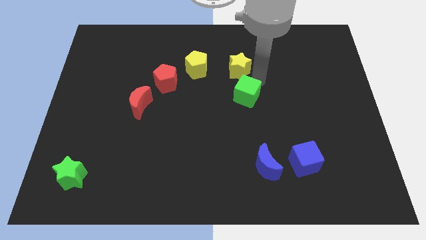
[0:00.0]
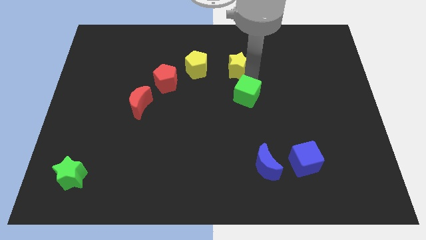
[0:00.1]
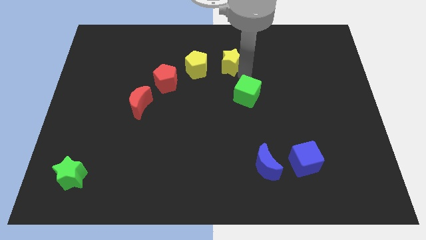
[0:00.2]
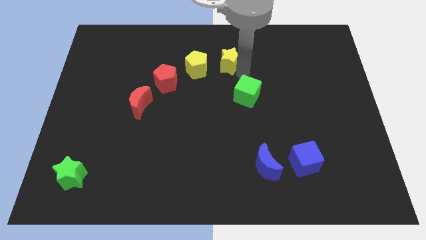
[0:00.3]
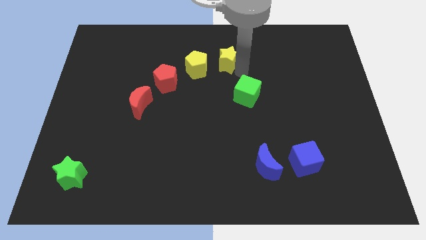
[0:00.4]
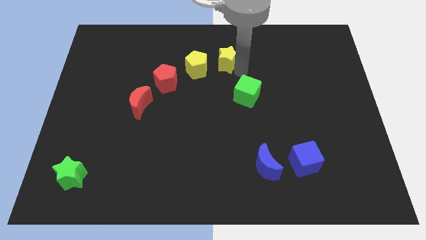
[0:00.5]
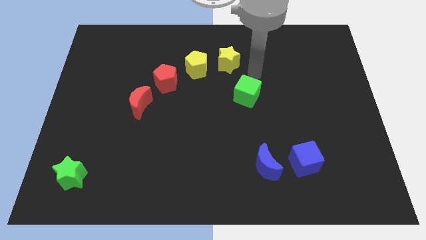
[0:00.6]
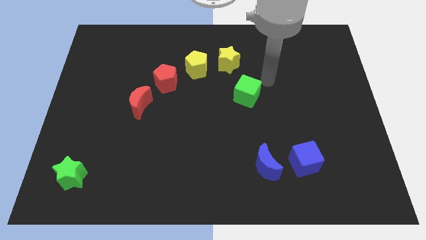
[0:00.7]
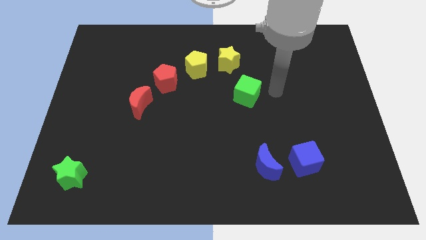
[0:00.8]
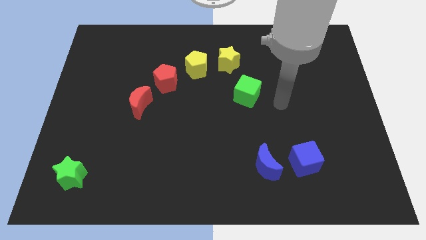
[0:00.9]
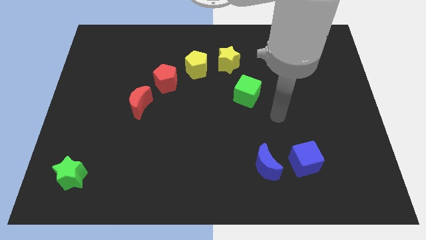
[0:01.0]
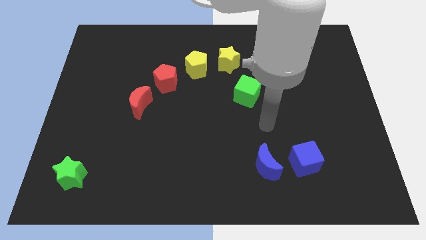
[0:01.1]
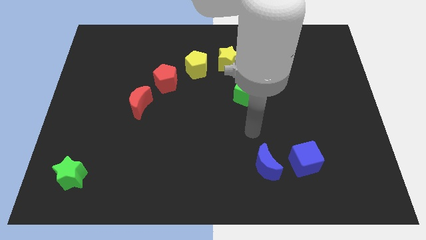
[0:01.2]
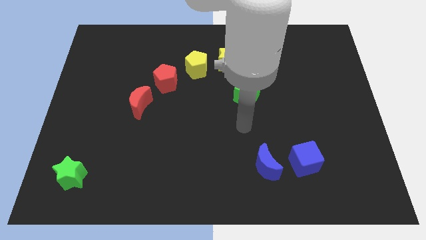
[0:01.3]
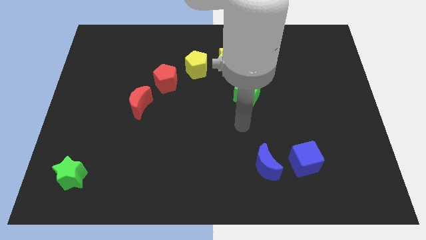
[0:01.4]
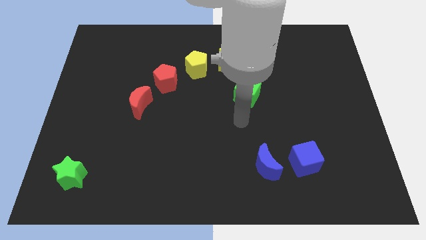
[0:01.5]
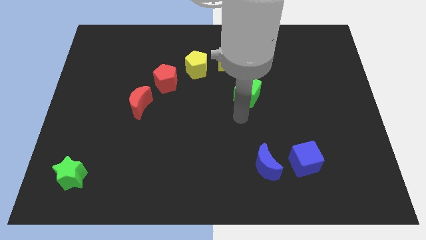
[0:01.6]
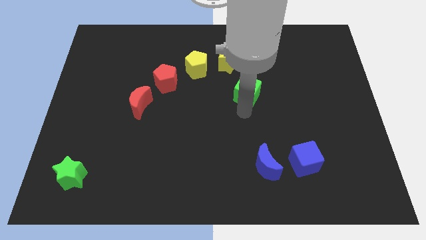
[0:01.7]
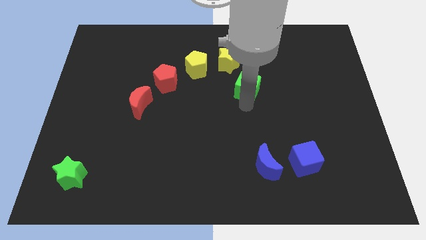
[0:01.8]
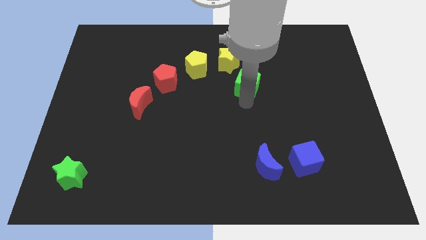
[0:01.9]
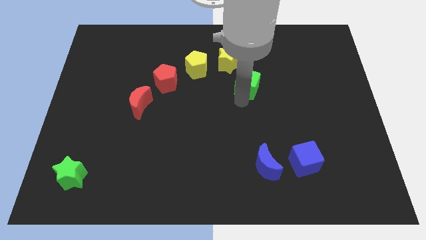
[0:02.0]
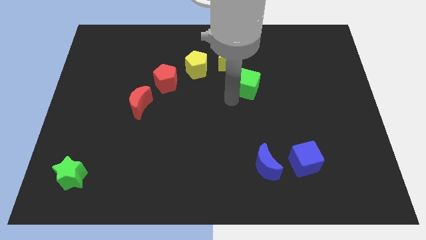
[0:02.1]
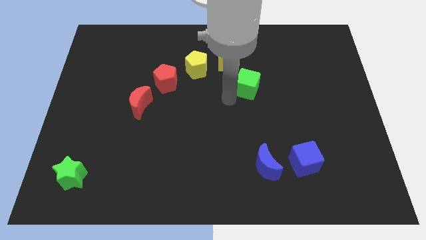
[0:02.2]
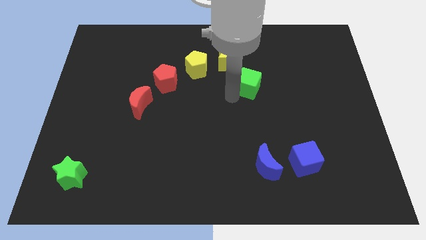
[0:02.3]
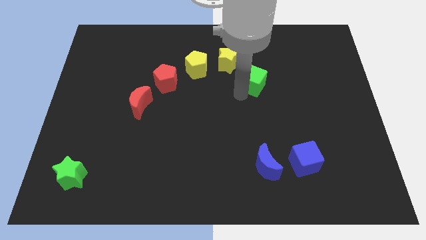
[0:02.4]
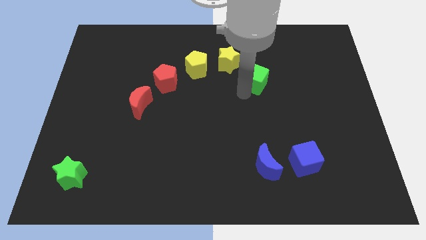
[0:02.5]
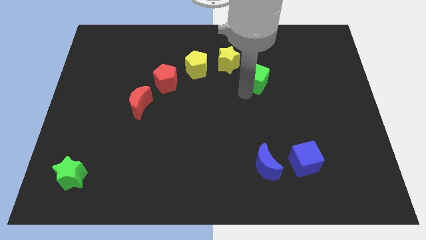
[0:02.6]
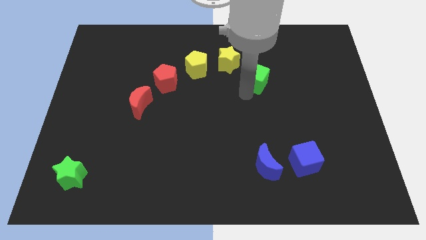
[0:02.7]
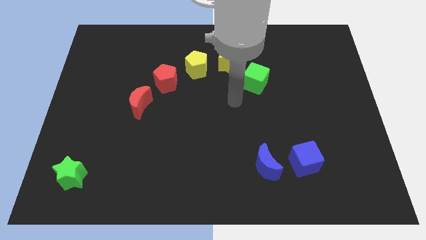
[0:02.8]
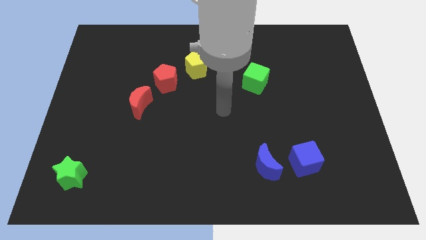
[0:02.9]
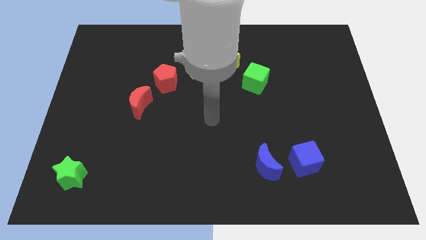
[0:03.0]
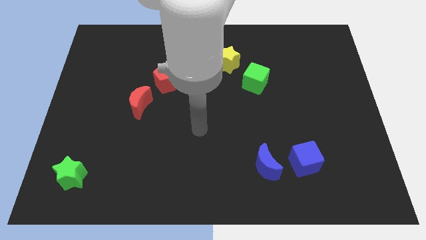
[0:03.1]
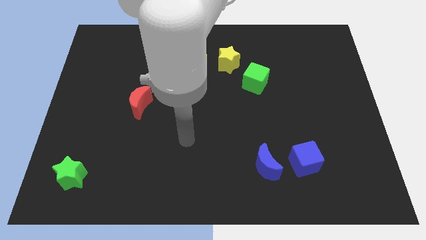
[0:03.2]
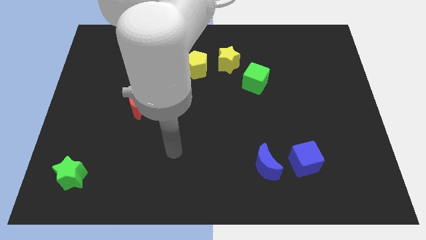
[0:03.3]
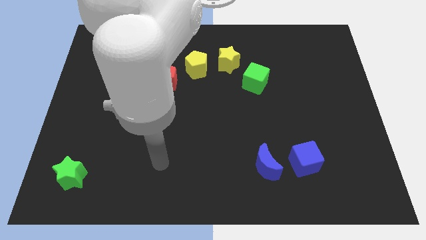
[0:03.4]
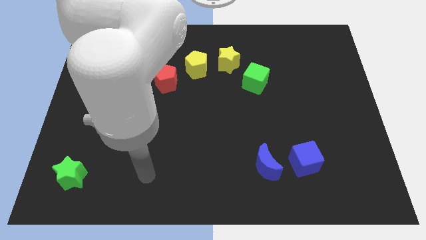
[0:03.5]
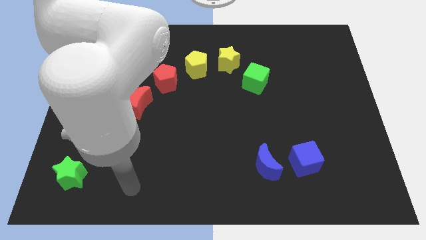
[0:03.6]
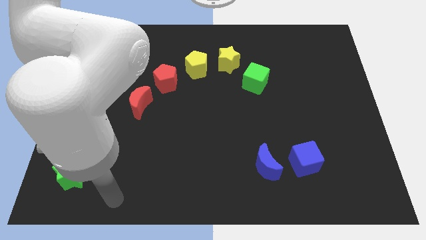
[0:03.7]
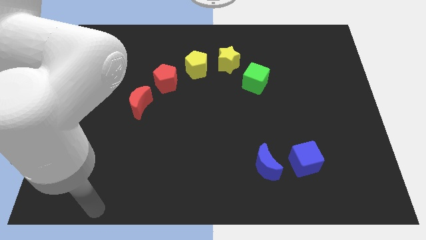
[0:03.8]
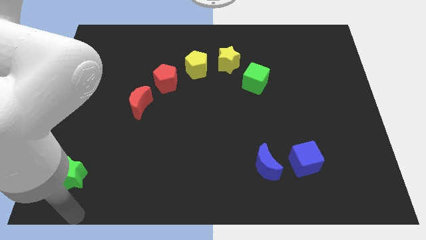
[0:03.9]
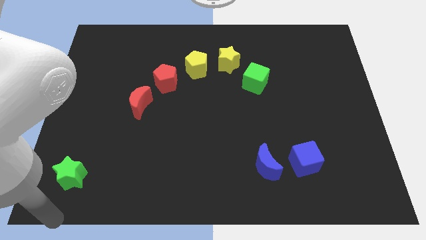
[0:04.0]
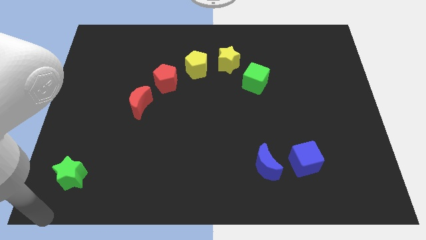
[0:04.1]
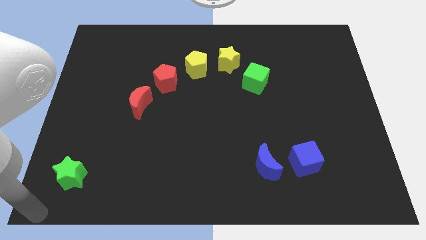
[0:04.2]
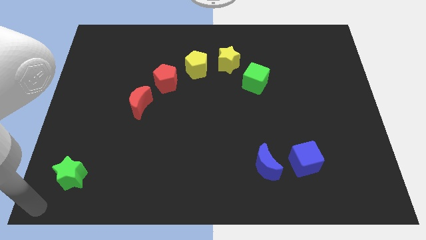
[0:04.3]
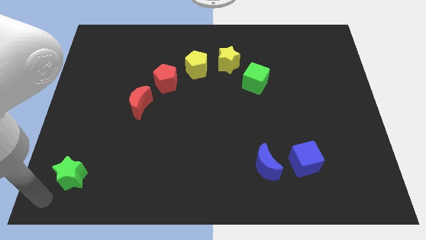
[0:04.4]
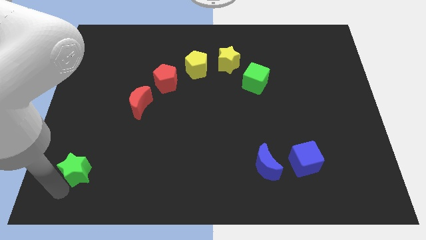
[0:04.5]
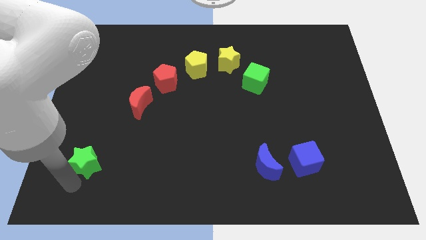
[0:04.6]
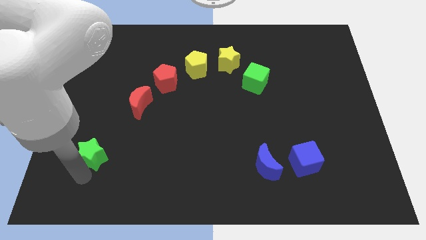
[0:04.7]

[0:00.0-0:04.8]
place the yellow star to right side of yellow pentagon

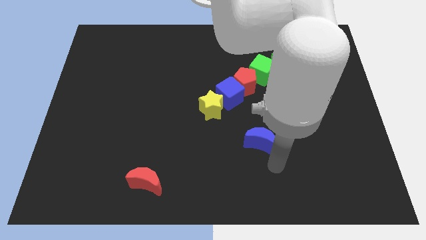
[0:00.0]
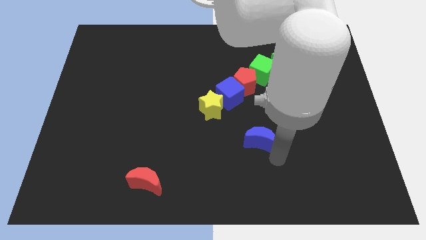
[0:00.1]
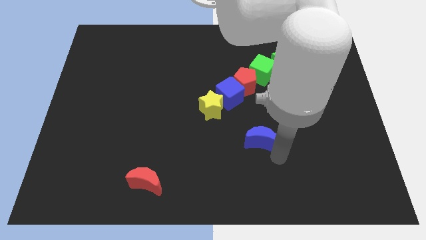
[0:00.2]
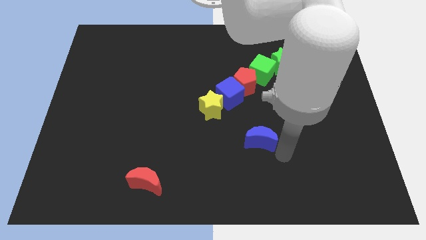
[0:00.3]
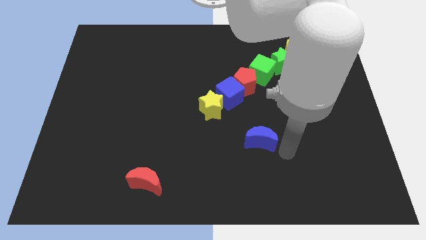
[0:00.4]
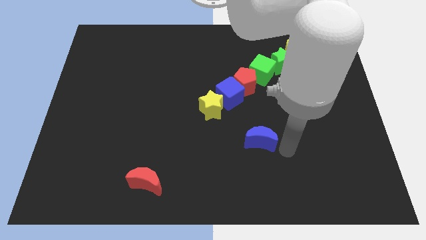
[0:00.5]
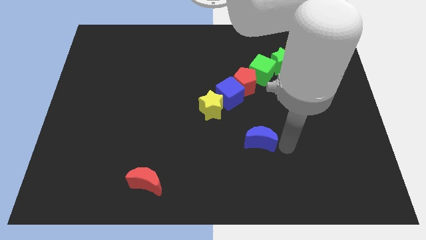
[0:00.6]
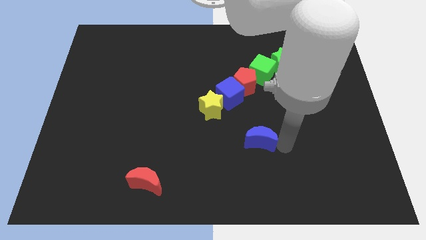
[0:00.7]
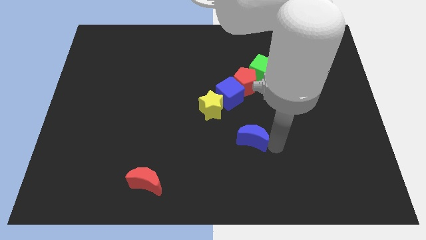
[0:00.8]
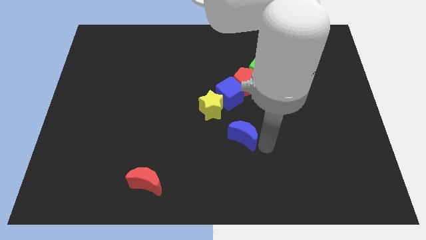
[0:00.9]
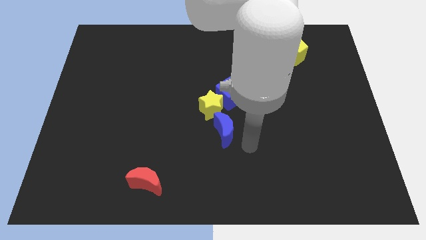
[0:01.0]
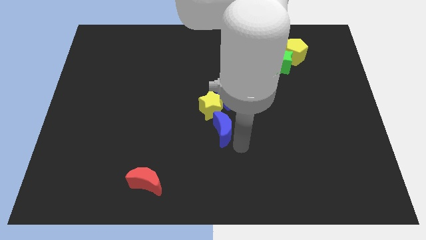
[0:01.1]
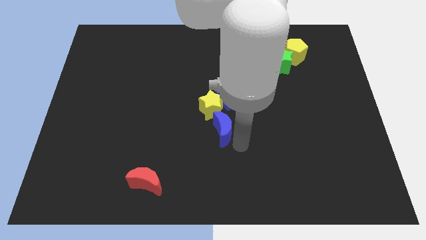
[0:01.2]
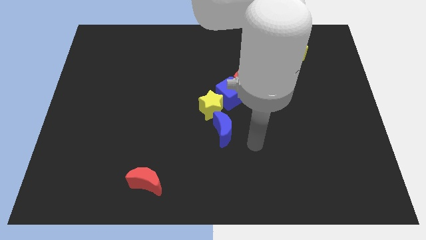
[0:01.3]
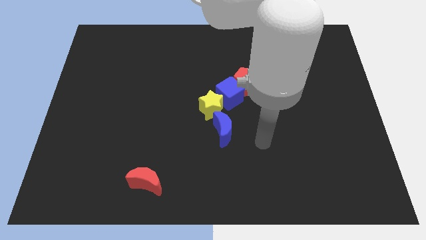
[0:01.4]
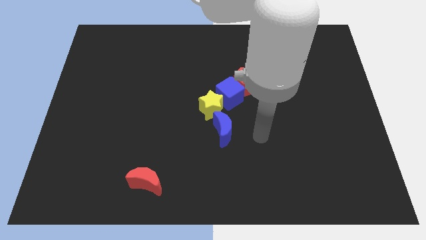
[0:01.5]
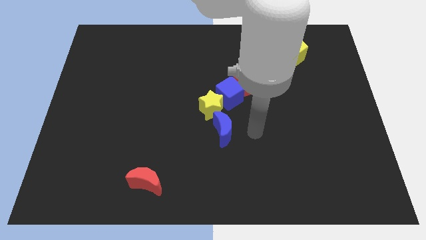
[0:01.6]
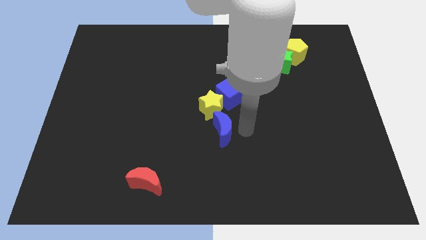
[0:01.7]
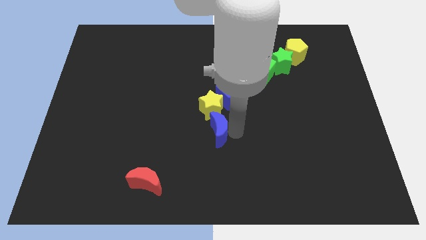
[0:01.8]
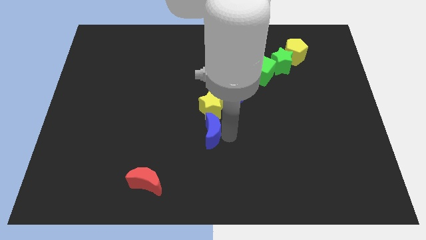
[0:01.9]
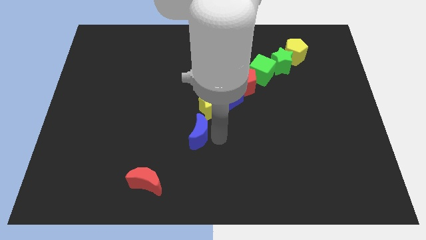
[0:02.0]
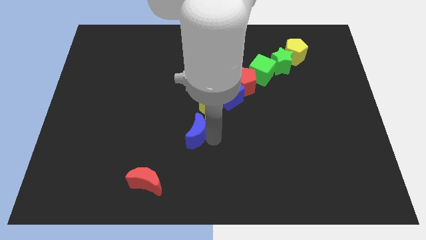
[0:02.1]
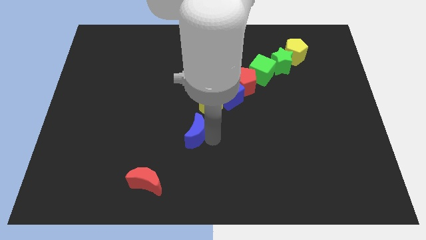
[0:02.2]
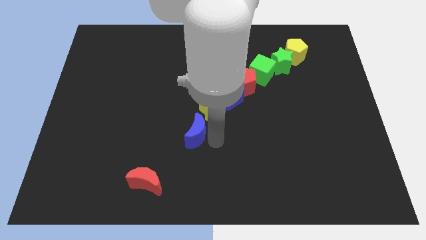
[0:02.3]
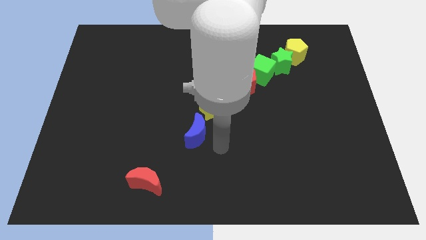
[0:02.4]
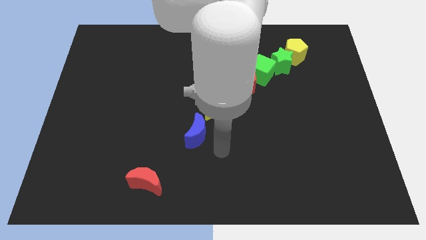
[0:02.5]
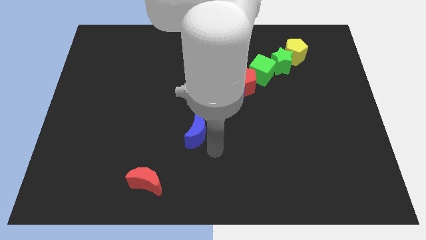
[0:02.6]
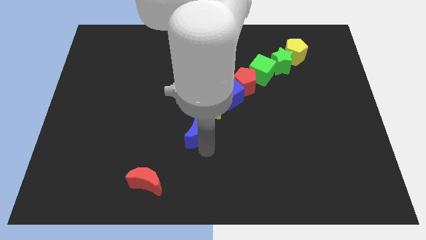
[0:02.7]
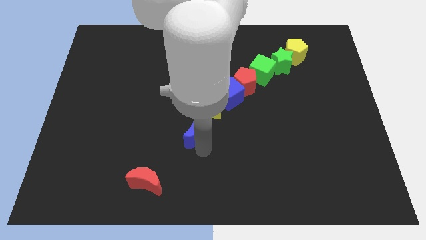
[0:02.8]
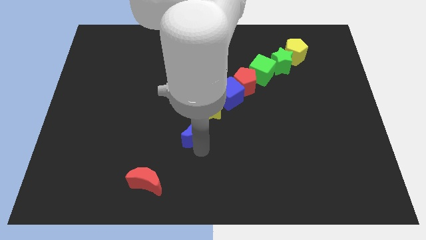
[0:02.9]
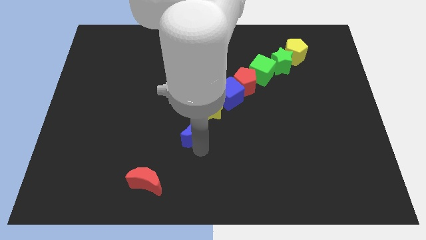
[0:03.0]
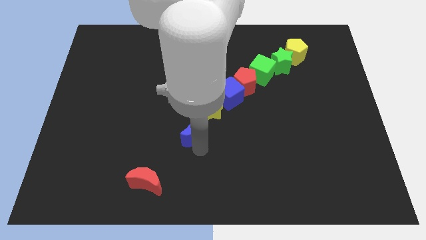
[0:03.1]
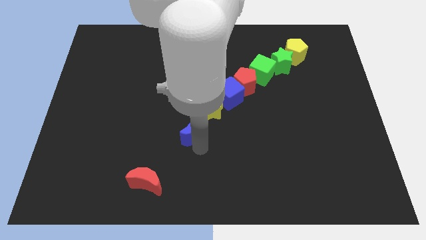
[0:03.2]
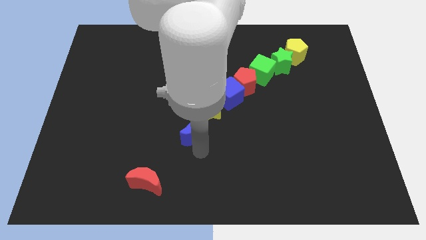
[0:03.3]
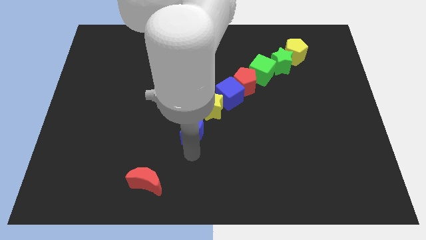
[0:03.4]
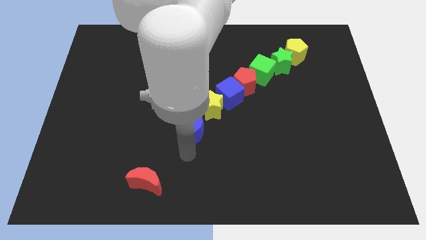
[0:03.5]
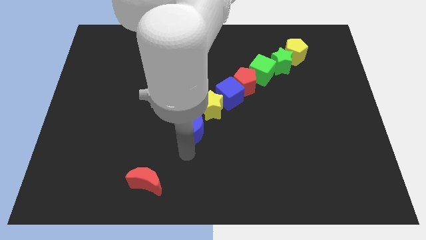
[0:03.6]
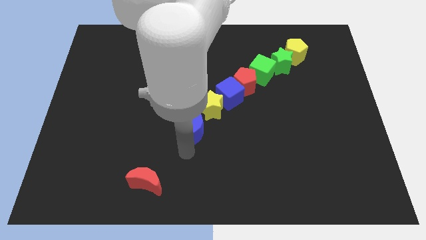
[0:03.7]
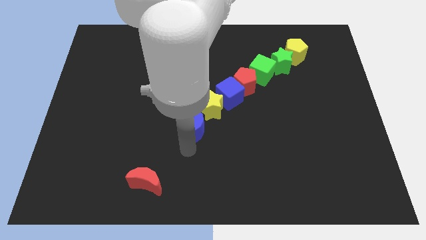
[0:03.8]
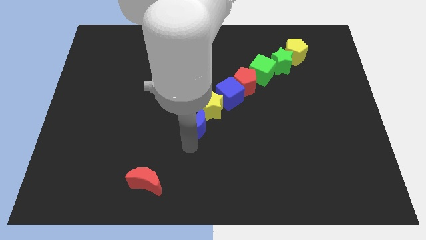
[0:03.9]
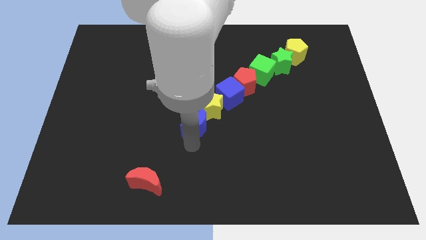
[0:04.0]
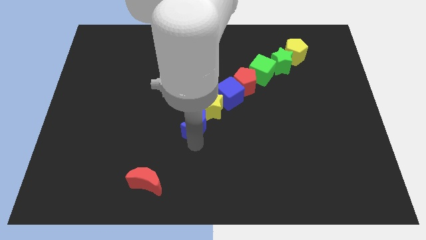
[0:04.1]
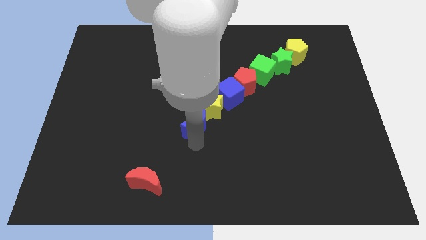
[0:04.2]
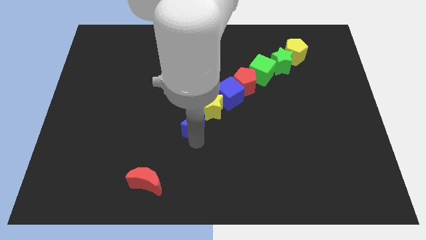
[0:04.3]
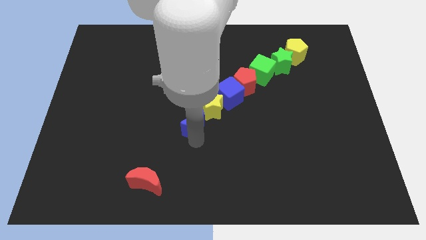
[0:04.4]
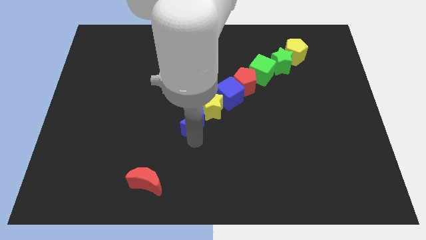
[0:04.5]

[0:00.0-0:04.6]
place the blue moon towards the bottom left side of the yellow star
